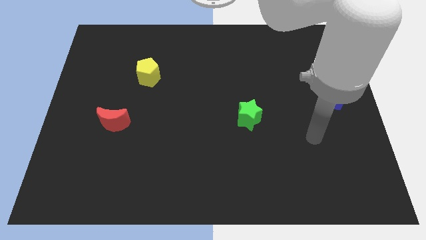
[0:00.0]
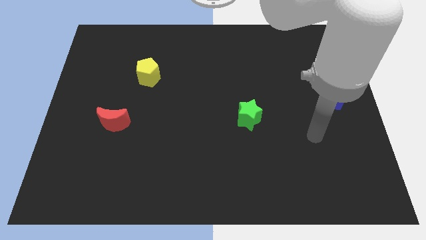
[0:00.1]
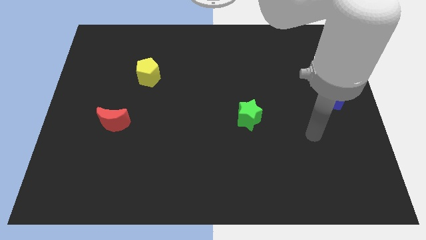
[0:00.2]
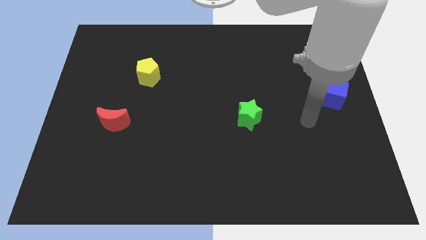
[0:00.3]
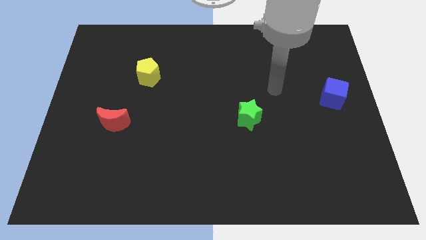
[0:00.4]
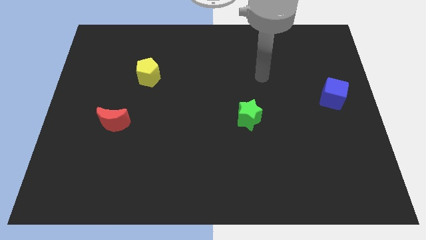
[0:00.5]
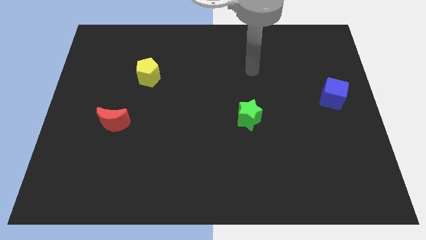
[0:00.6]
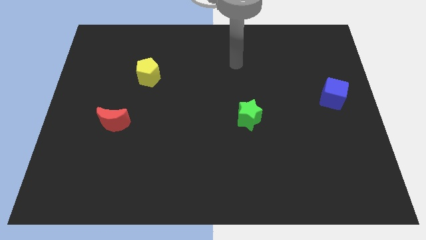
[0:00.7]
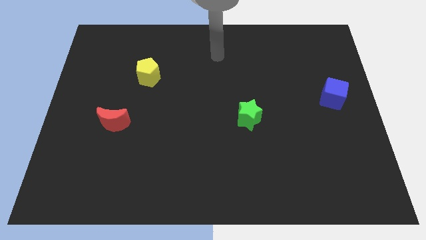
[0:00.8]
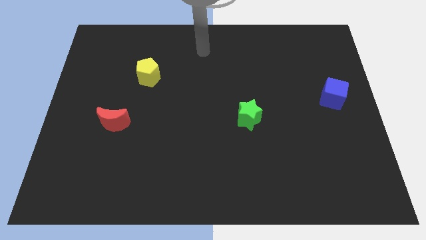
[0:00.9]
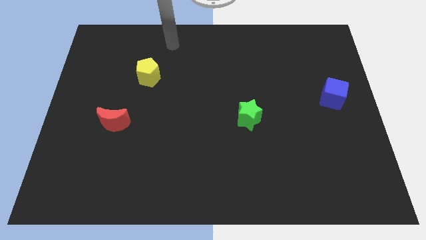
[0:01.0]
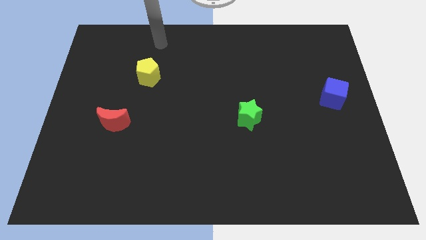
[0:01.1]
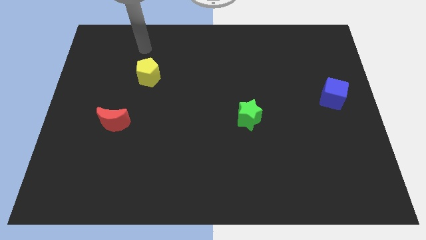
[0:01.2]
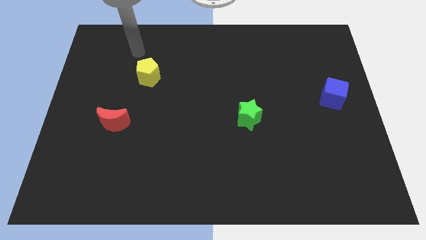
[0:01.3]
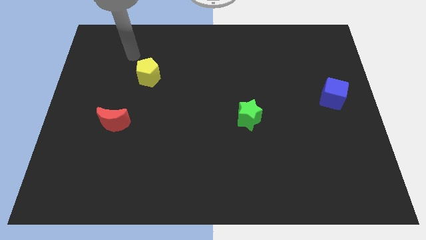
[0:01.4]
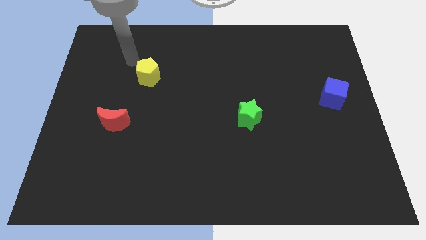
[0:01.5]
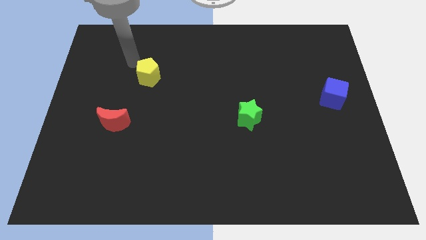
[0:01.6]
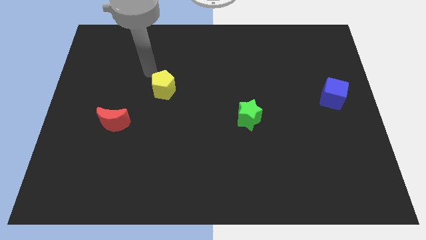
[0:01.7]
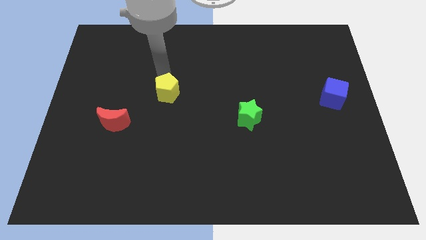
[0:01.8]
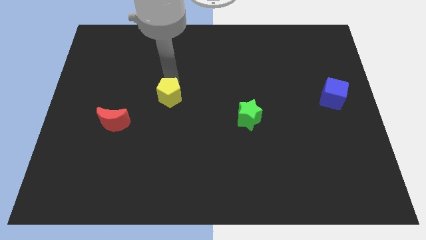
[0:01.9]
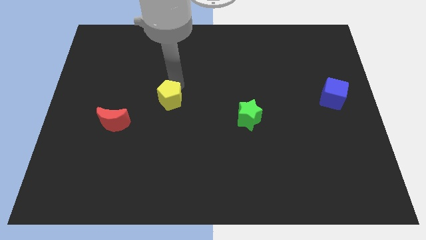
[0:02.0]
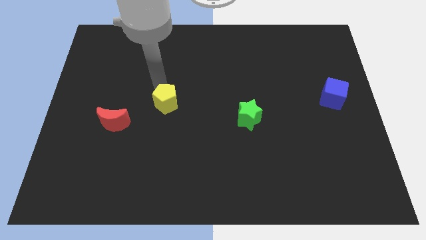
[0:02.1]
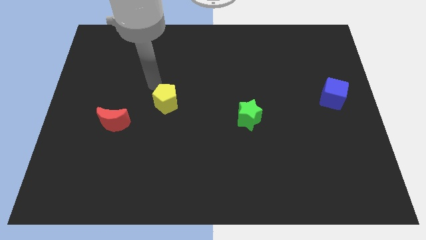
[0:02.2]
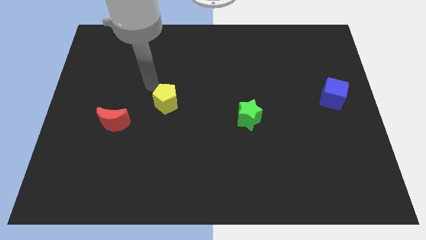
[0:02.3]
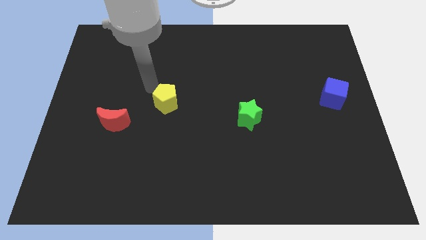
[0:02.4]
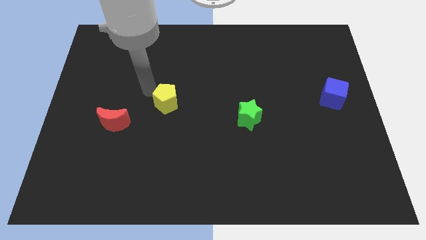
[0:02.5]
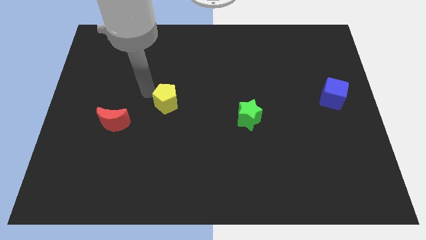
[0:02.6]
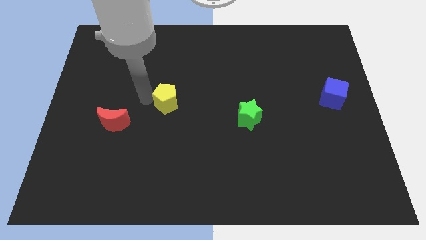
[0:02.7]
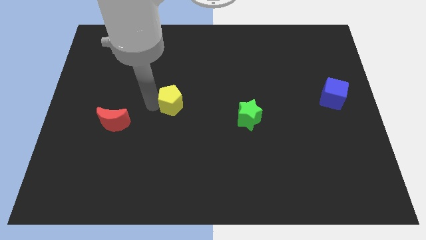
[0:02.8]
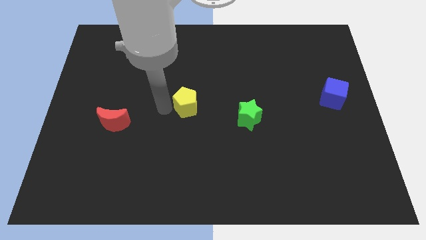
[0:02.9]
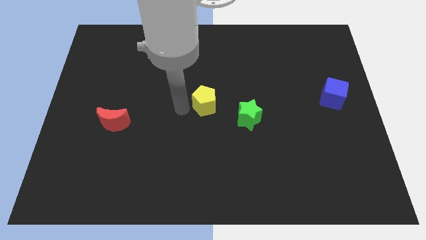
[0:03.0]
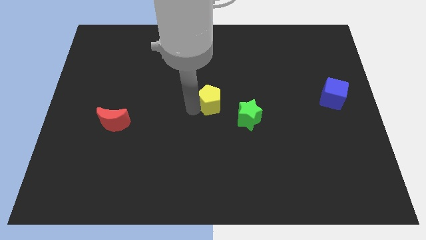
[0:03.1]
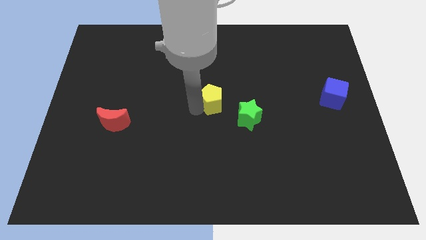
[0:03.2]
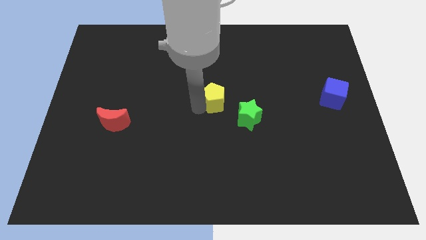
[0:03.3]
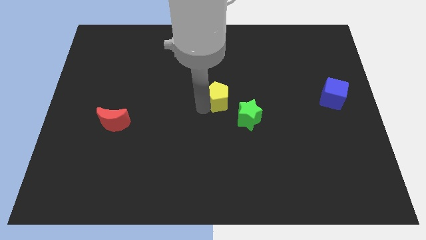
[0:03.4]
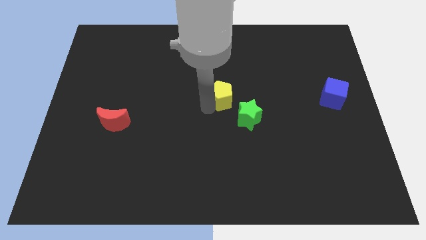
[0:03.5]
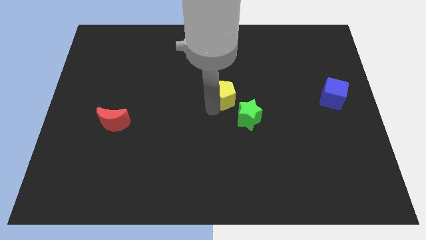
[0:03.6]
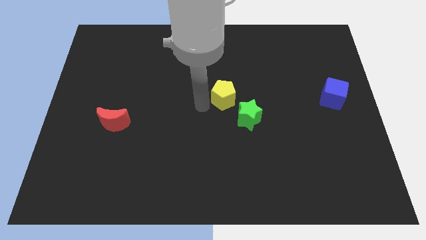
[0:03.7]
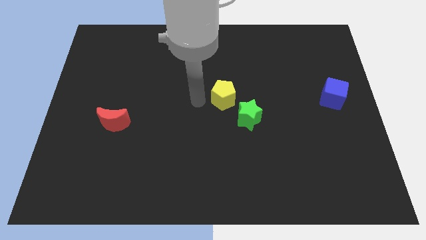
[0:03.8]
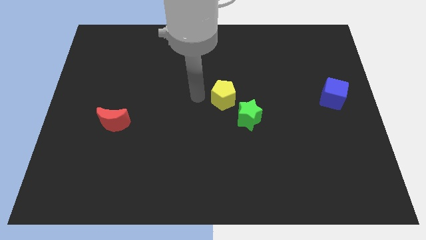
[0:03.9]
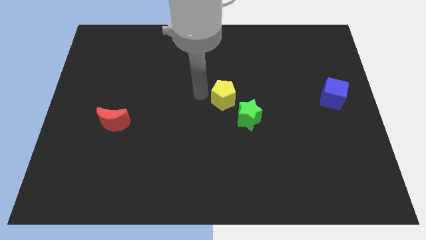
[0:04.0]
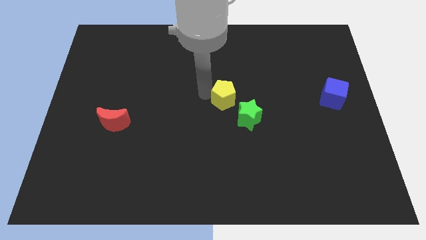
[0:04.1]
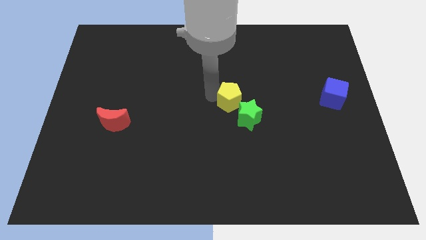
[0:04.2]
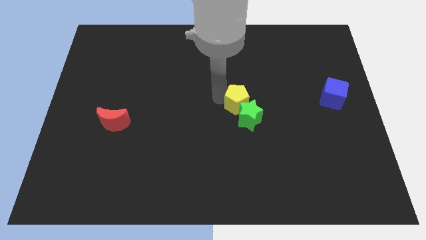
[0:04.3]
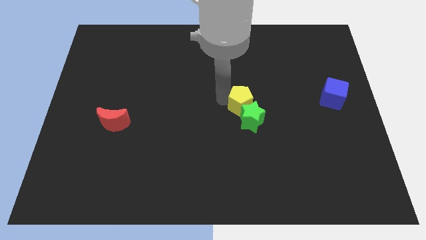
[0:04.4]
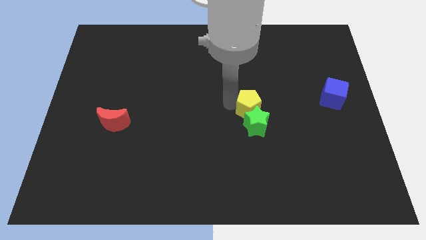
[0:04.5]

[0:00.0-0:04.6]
slide the pentagon close to the green block

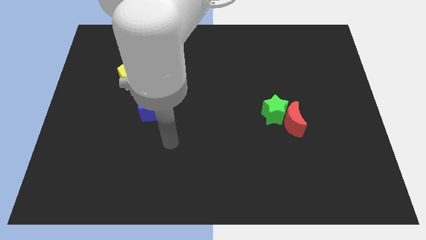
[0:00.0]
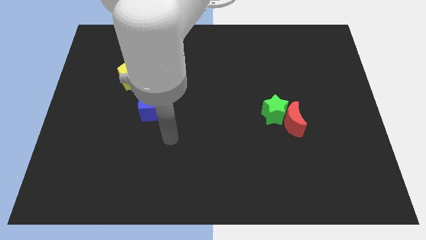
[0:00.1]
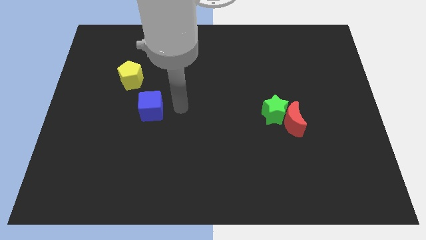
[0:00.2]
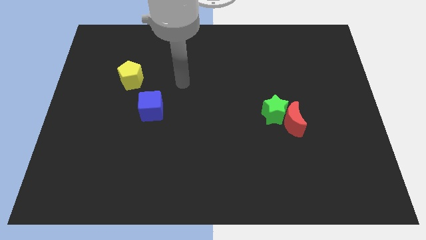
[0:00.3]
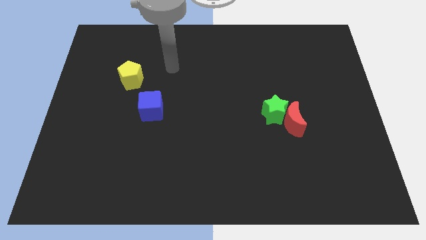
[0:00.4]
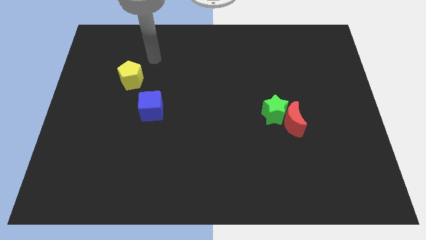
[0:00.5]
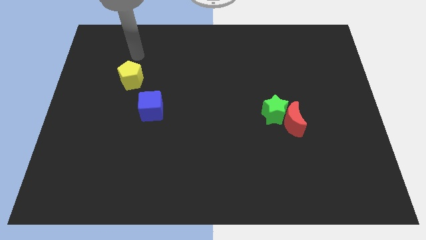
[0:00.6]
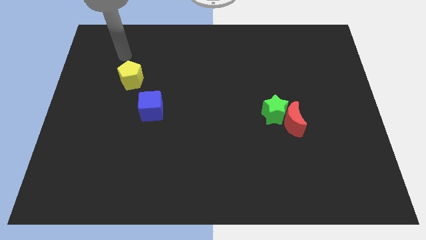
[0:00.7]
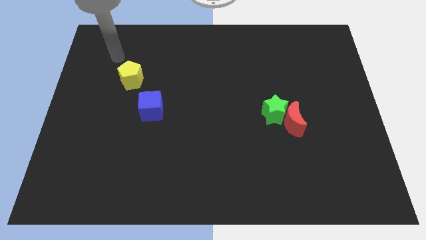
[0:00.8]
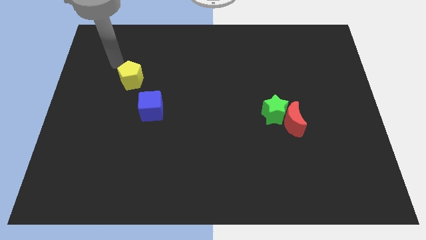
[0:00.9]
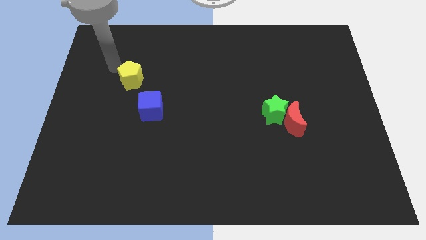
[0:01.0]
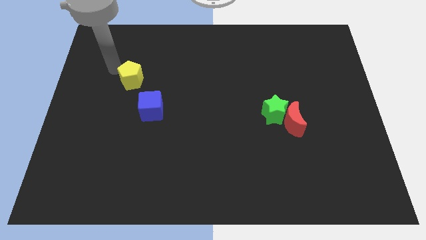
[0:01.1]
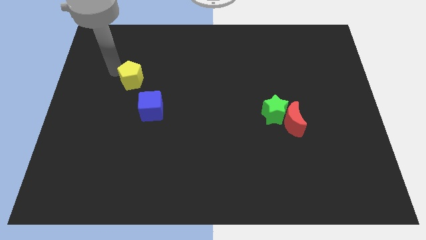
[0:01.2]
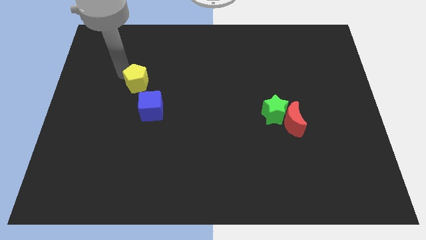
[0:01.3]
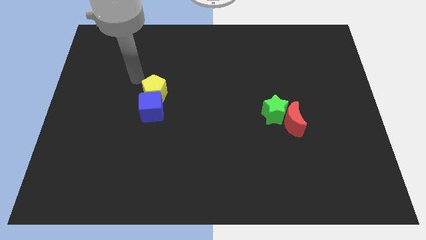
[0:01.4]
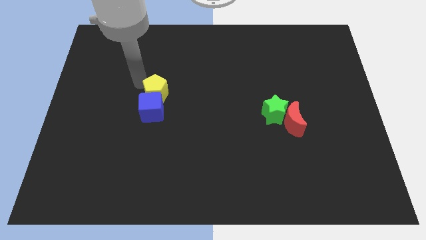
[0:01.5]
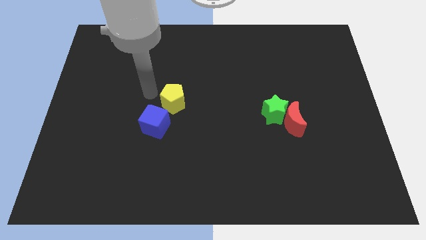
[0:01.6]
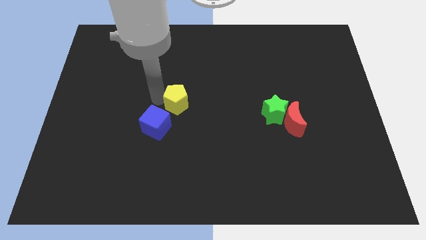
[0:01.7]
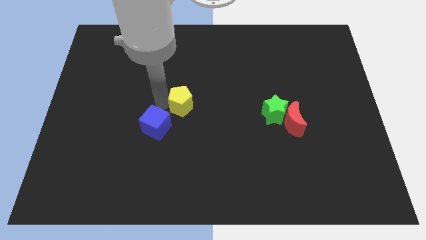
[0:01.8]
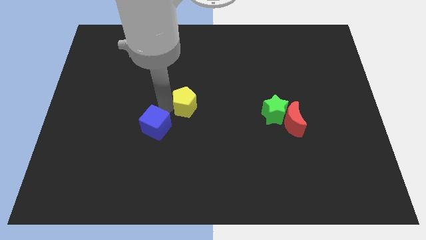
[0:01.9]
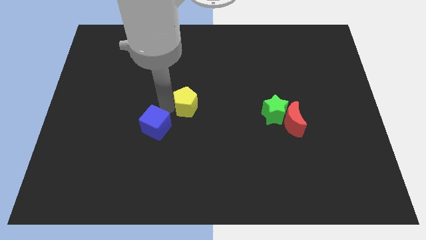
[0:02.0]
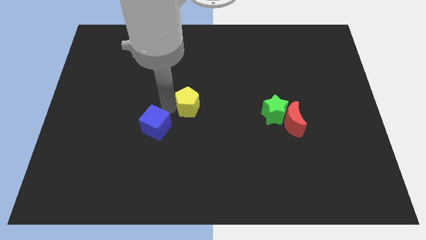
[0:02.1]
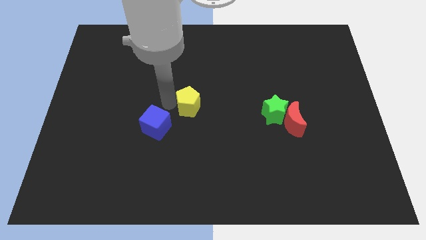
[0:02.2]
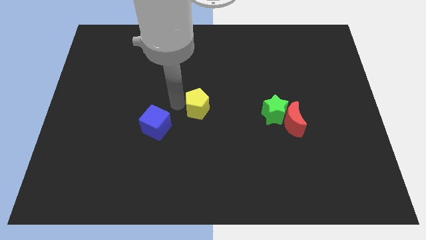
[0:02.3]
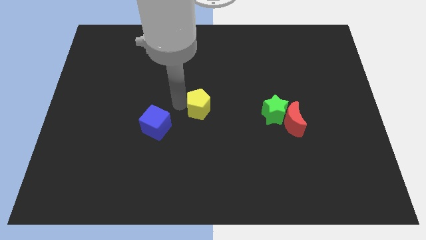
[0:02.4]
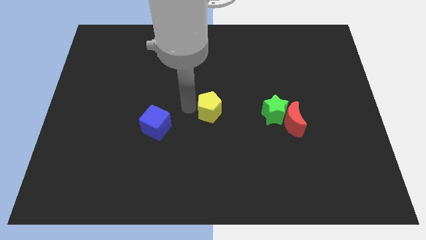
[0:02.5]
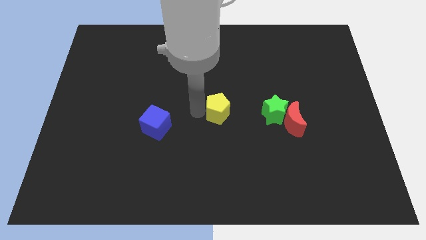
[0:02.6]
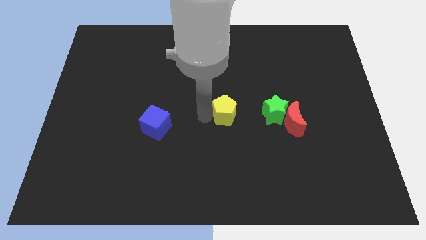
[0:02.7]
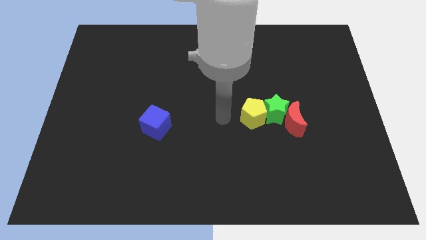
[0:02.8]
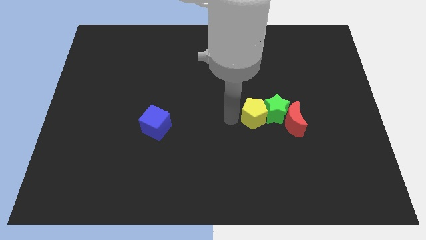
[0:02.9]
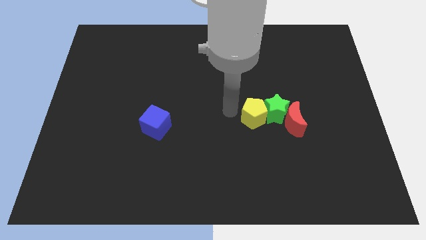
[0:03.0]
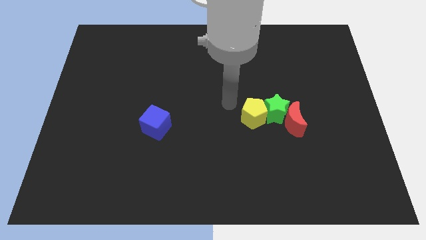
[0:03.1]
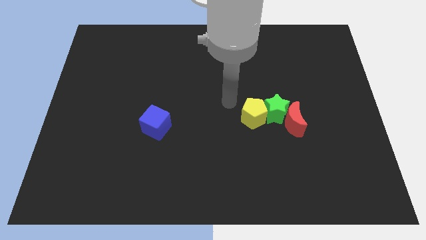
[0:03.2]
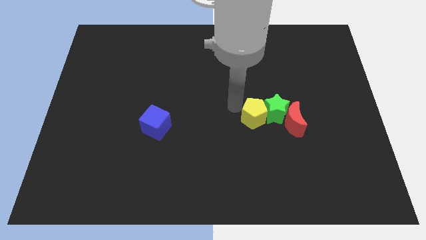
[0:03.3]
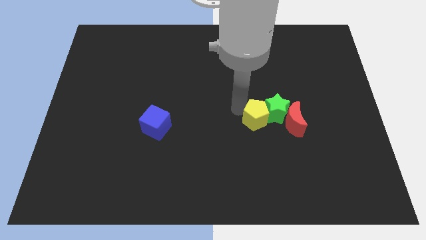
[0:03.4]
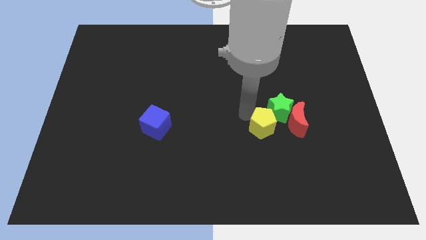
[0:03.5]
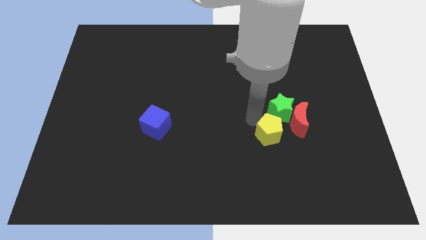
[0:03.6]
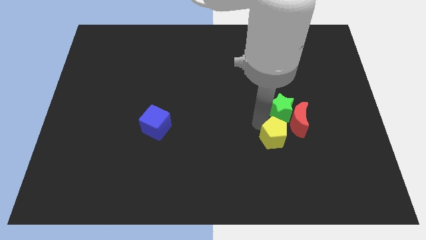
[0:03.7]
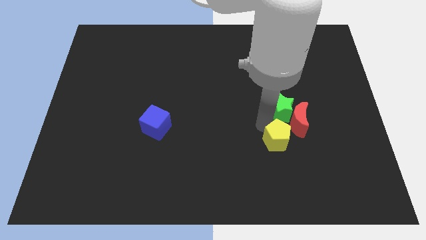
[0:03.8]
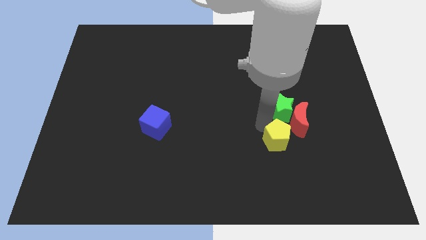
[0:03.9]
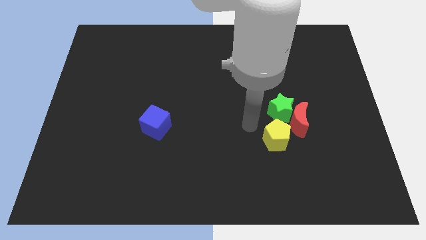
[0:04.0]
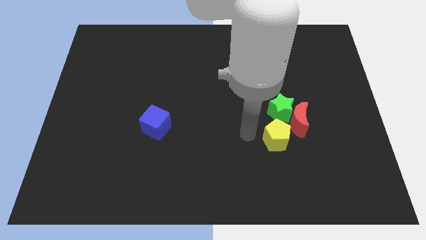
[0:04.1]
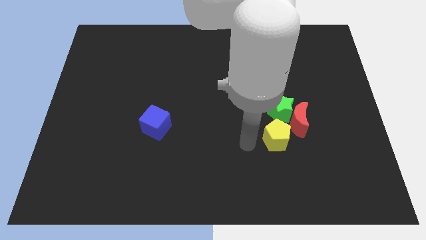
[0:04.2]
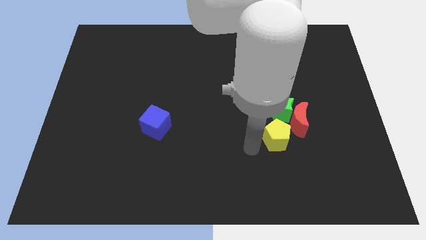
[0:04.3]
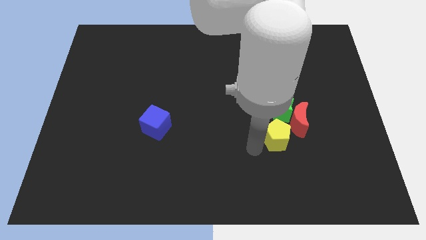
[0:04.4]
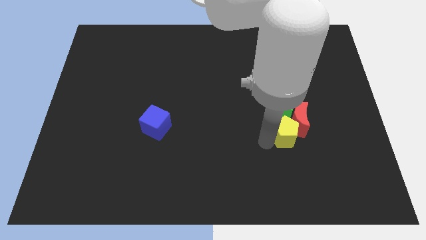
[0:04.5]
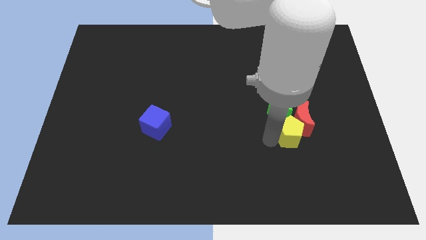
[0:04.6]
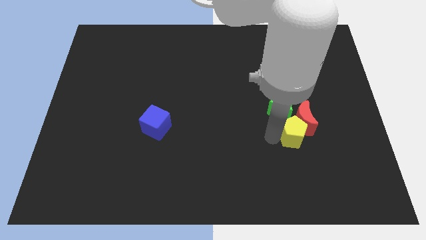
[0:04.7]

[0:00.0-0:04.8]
push the yellow block close to the red moon
